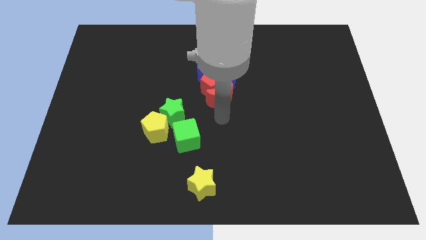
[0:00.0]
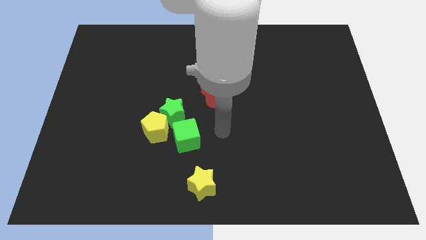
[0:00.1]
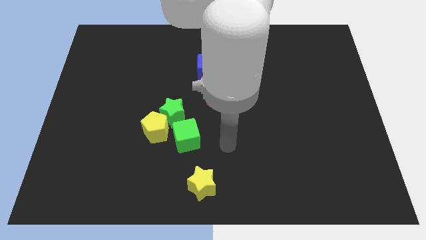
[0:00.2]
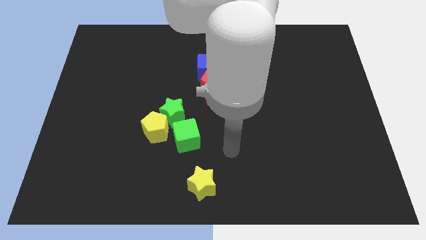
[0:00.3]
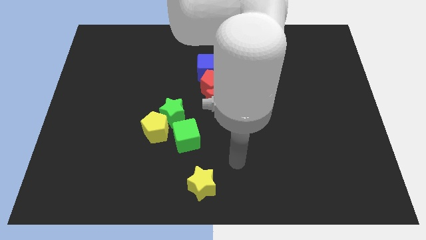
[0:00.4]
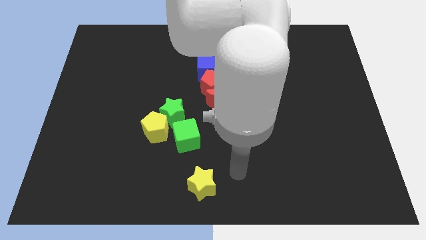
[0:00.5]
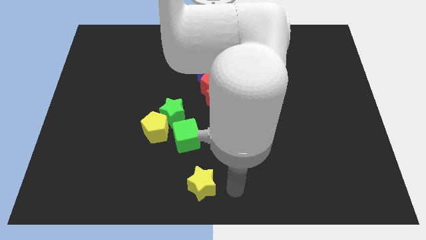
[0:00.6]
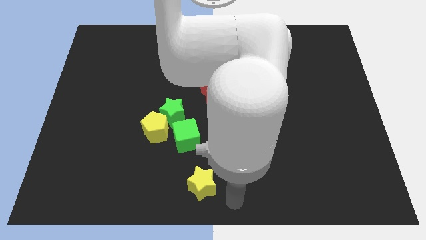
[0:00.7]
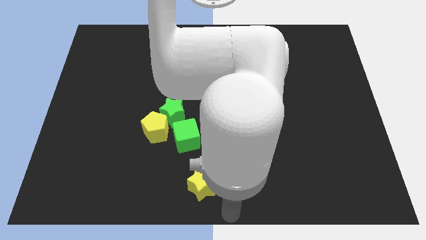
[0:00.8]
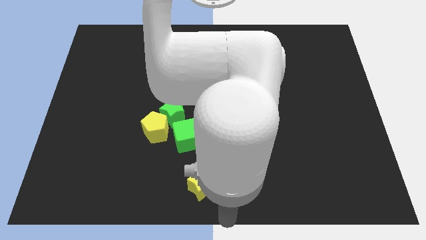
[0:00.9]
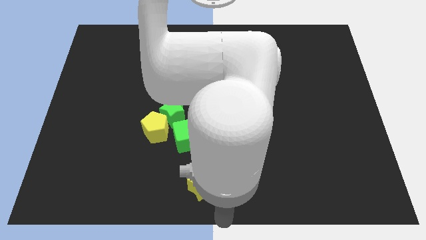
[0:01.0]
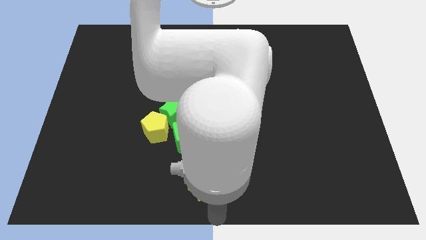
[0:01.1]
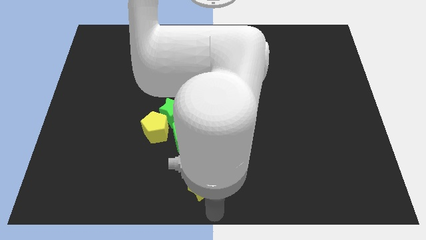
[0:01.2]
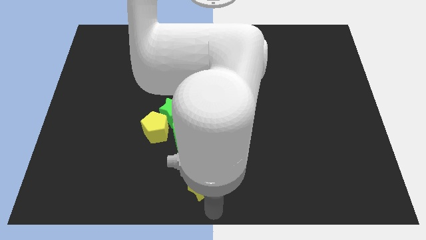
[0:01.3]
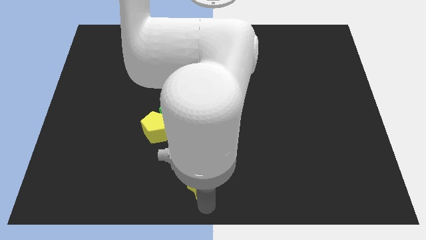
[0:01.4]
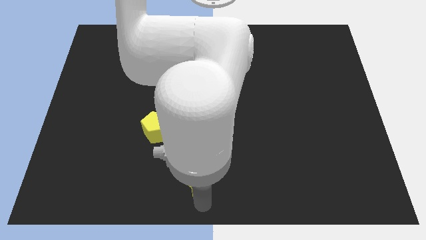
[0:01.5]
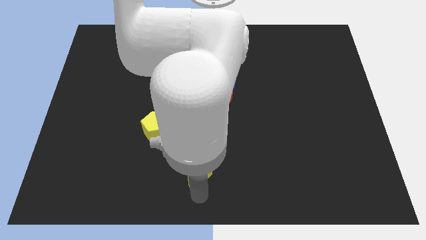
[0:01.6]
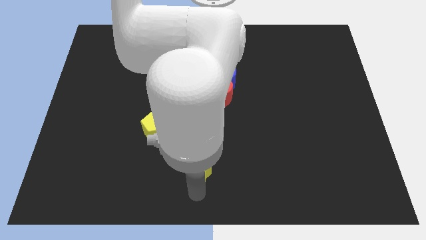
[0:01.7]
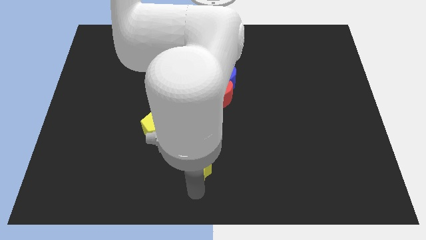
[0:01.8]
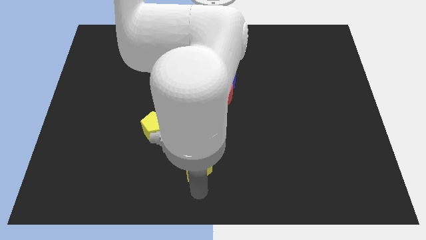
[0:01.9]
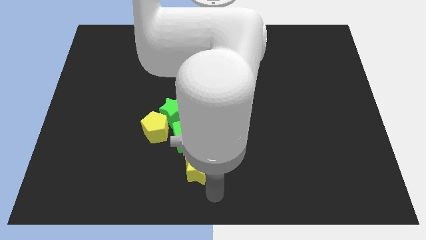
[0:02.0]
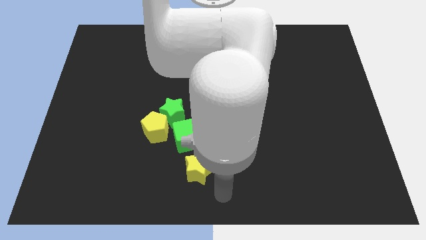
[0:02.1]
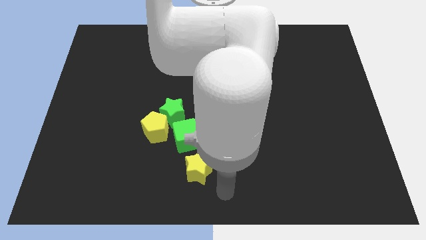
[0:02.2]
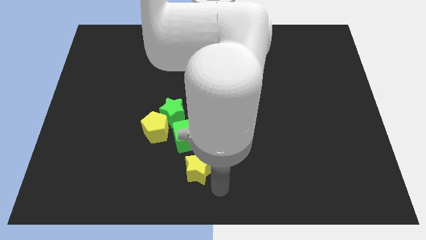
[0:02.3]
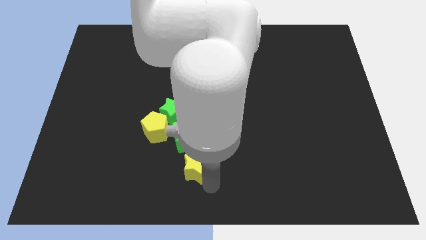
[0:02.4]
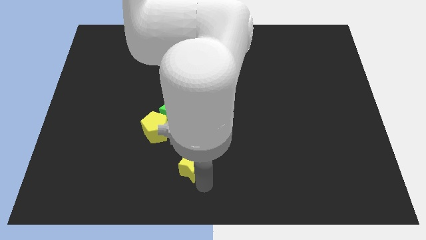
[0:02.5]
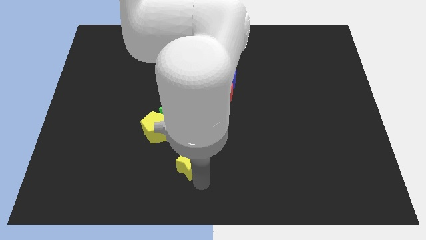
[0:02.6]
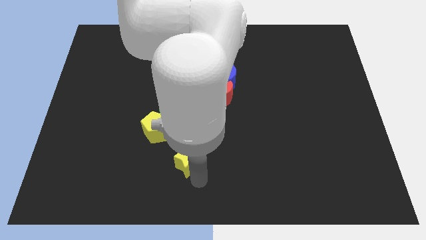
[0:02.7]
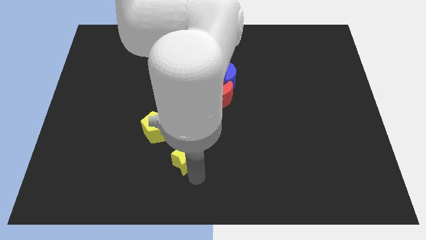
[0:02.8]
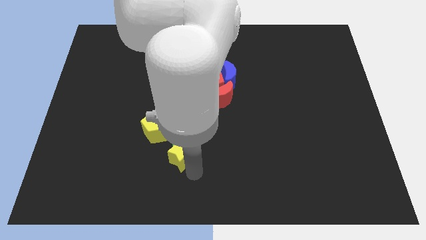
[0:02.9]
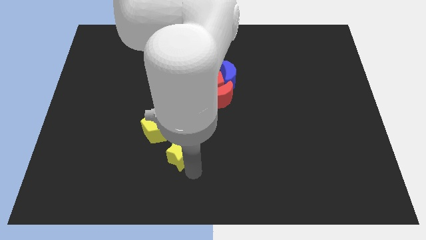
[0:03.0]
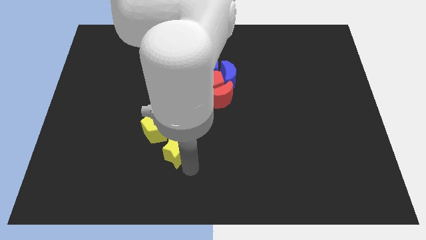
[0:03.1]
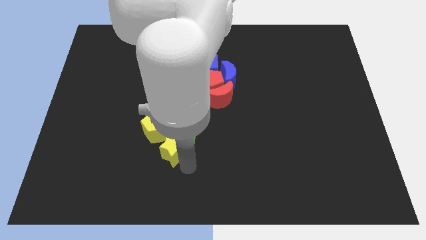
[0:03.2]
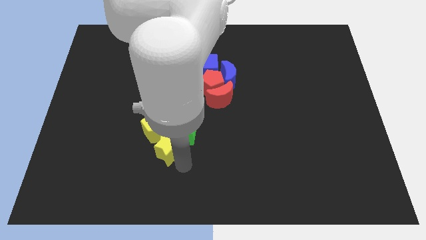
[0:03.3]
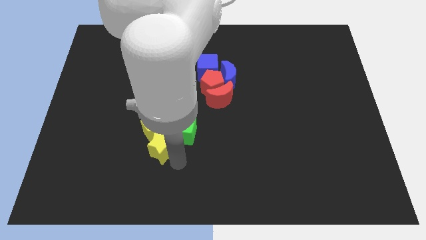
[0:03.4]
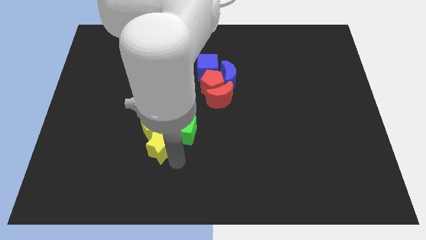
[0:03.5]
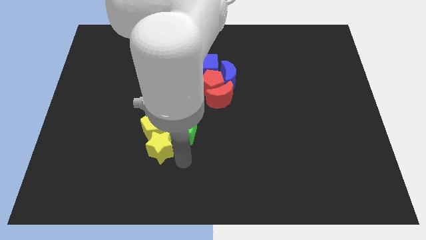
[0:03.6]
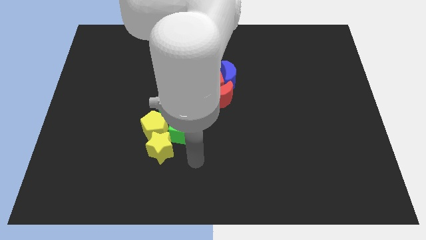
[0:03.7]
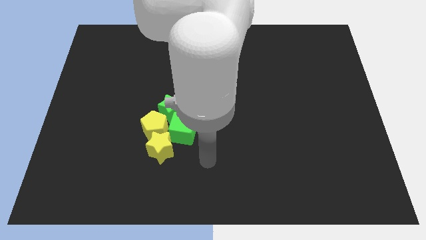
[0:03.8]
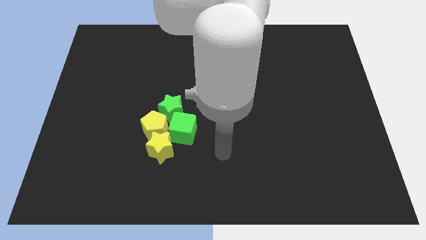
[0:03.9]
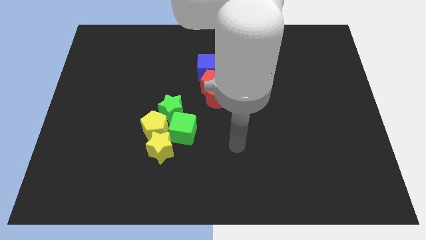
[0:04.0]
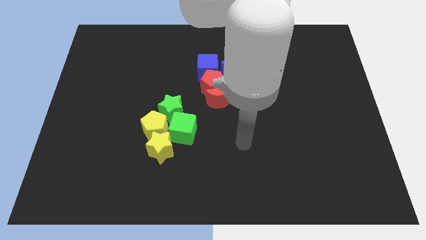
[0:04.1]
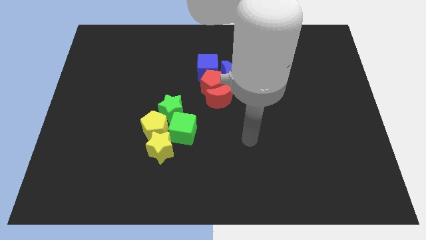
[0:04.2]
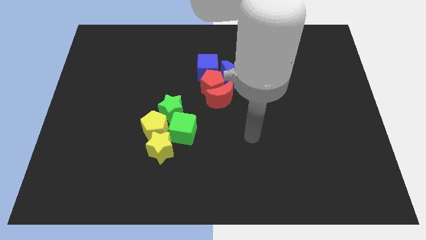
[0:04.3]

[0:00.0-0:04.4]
push yellow star towards yellow pentagon

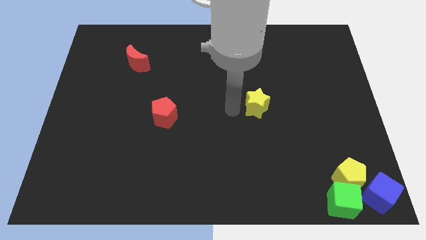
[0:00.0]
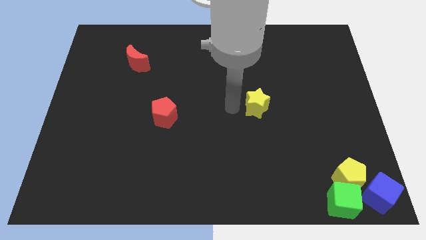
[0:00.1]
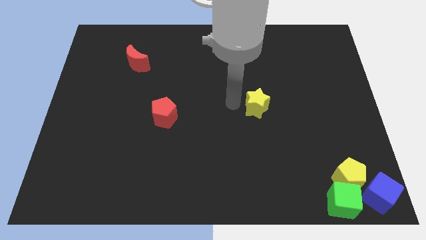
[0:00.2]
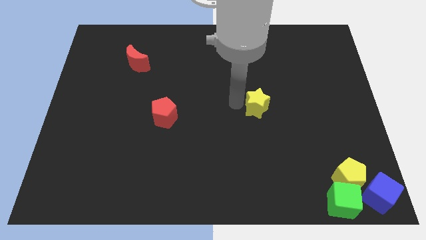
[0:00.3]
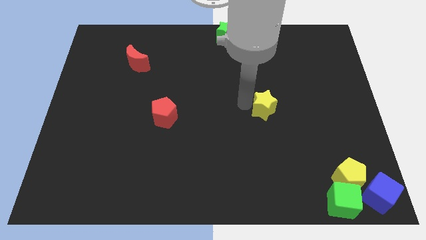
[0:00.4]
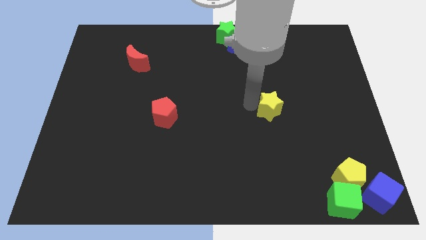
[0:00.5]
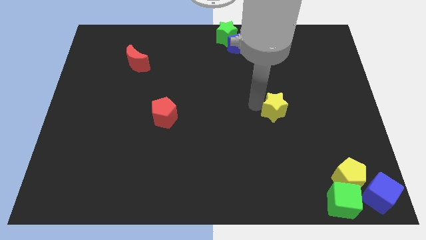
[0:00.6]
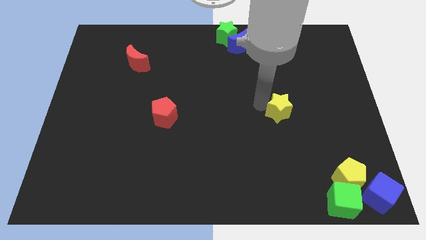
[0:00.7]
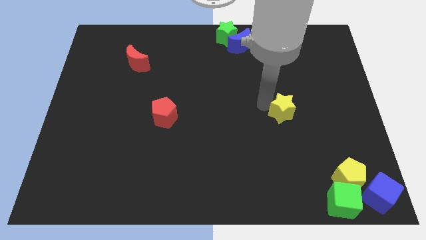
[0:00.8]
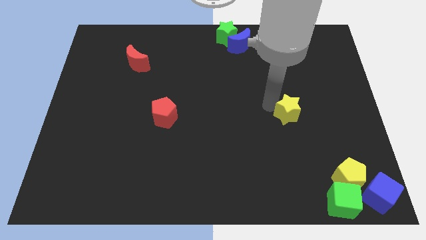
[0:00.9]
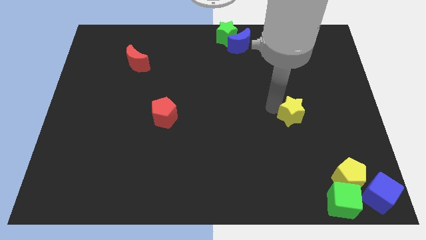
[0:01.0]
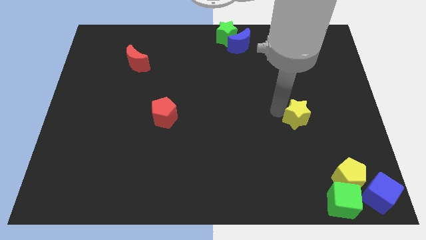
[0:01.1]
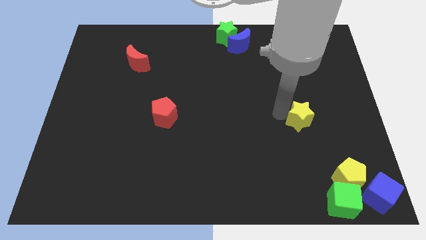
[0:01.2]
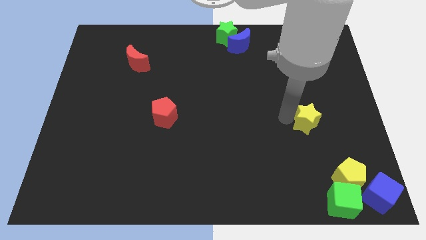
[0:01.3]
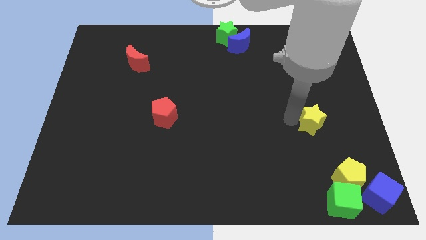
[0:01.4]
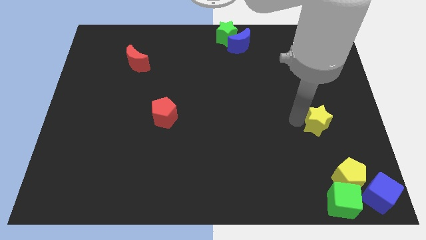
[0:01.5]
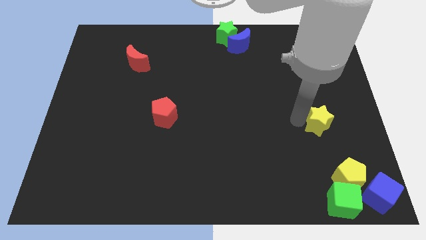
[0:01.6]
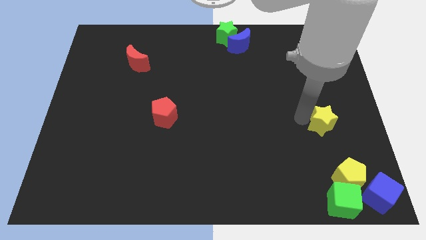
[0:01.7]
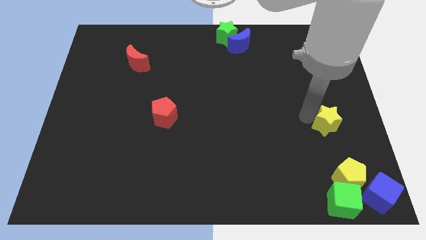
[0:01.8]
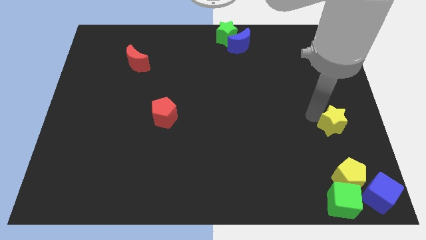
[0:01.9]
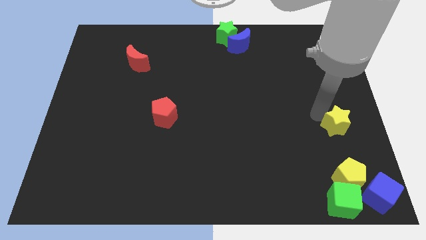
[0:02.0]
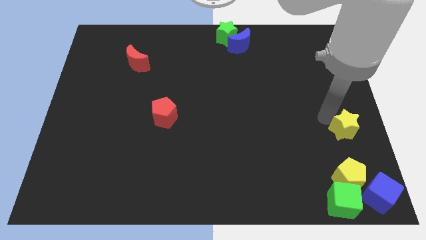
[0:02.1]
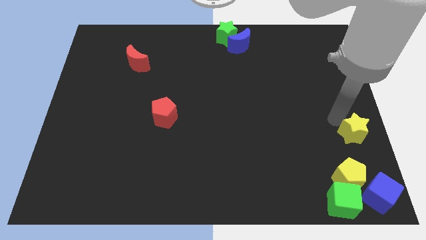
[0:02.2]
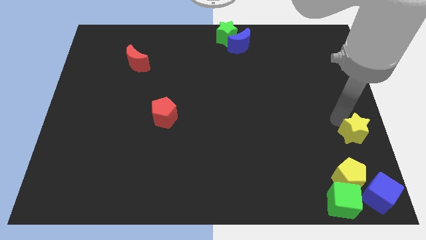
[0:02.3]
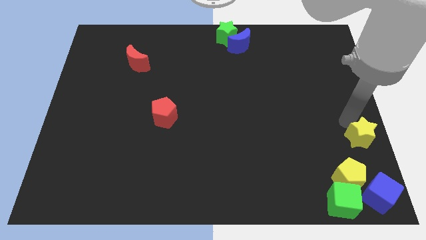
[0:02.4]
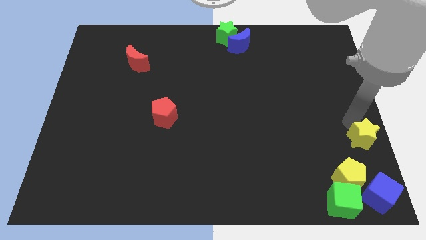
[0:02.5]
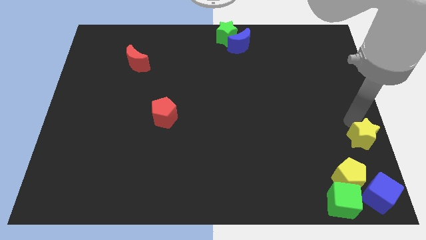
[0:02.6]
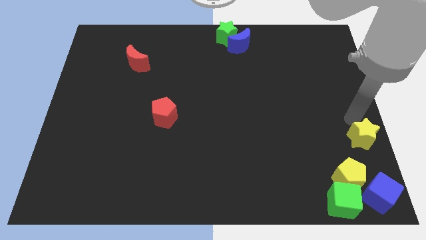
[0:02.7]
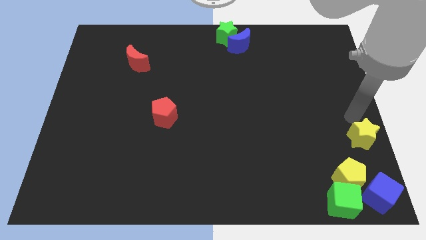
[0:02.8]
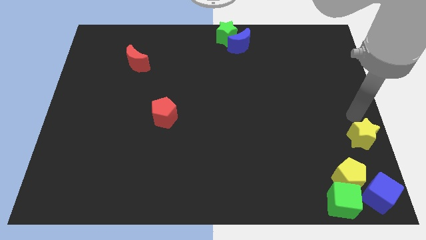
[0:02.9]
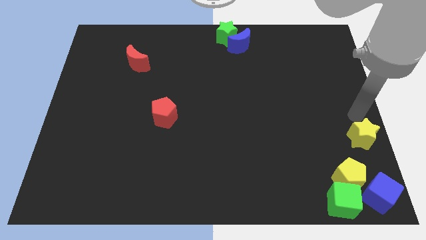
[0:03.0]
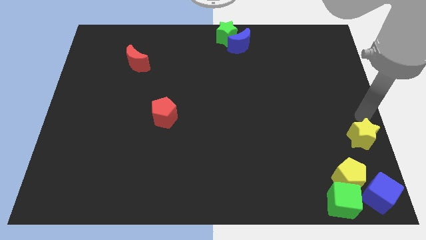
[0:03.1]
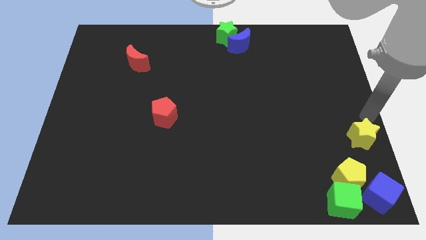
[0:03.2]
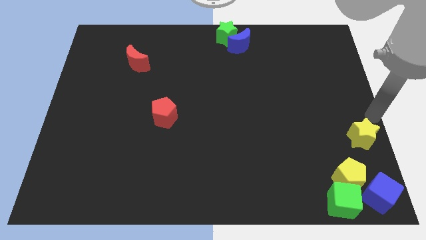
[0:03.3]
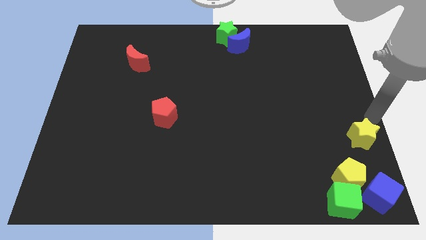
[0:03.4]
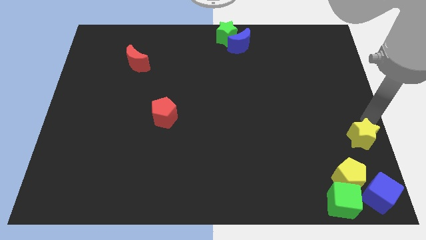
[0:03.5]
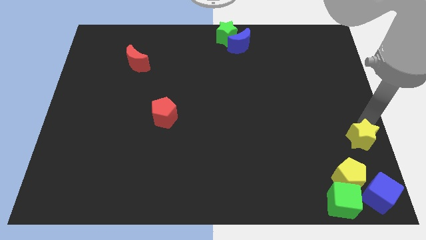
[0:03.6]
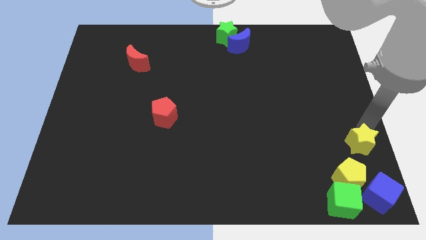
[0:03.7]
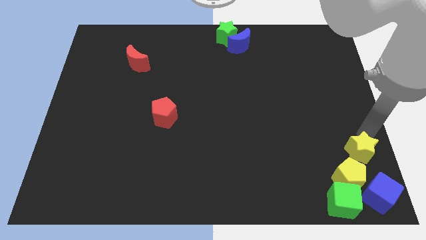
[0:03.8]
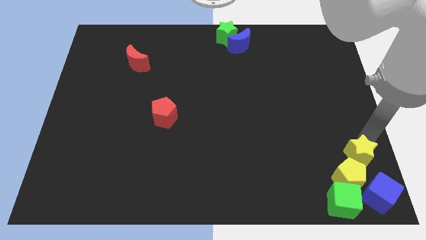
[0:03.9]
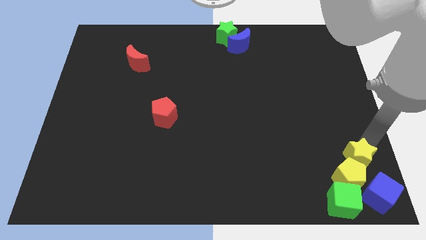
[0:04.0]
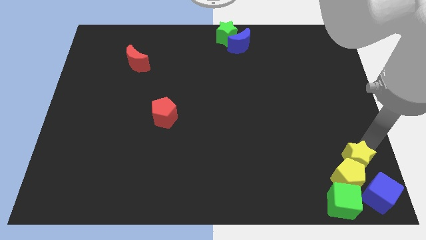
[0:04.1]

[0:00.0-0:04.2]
push the yellow star towards the yellow pentagon

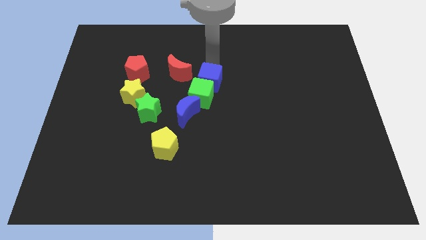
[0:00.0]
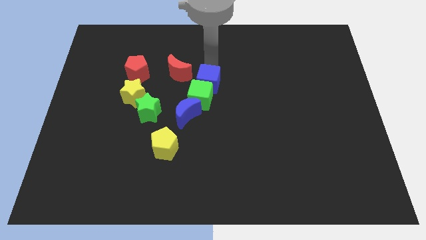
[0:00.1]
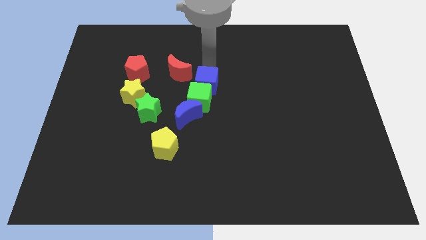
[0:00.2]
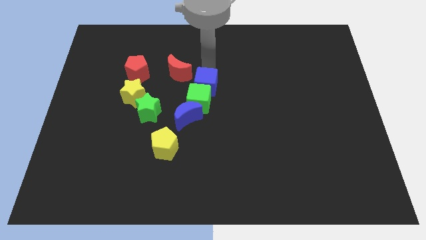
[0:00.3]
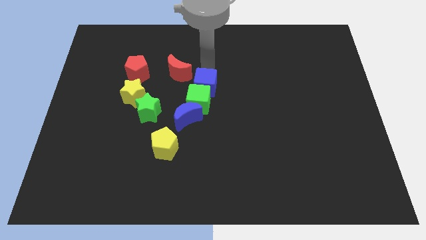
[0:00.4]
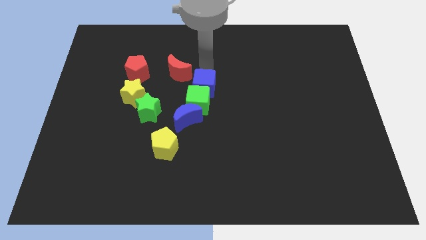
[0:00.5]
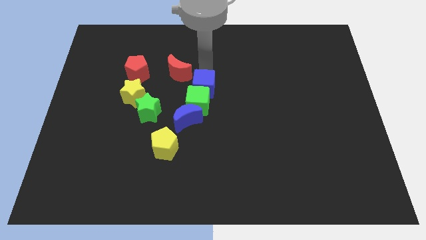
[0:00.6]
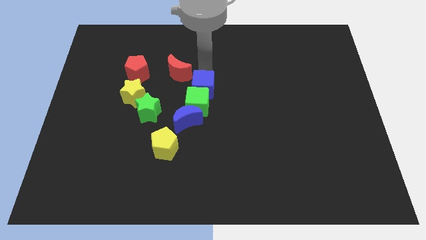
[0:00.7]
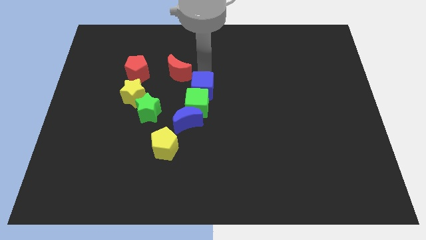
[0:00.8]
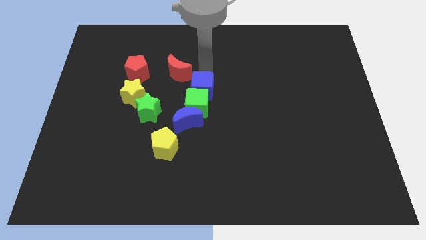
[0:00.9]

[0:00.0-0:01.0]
push the blue cube into the green cube
